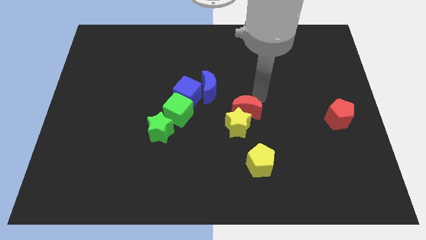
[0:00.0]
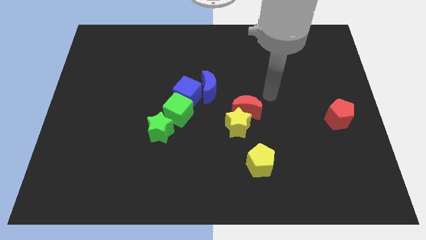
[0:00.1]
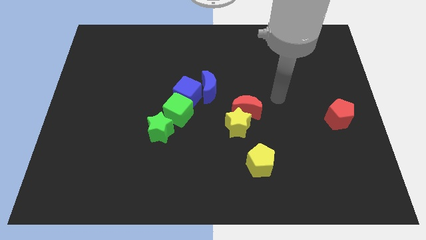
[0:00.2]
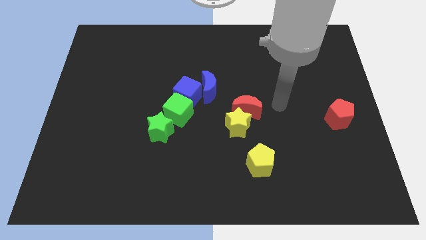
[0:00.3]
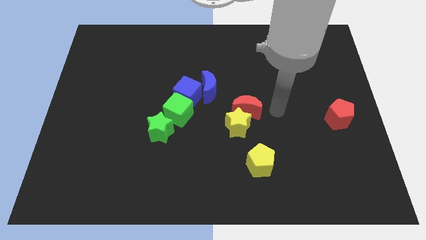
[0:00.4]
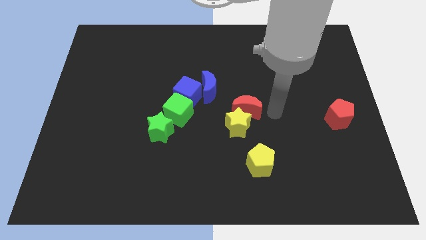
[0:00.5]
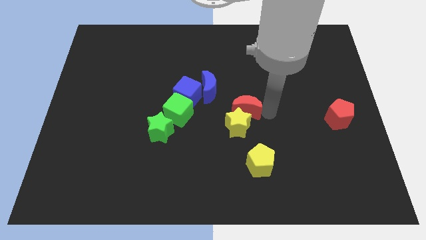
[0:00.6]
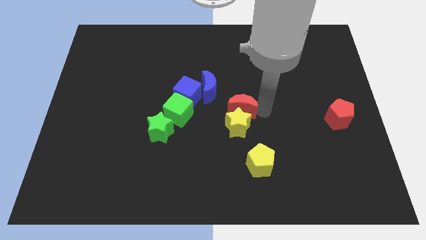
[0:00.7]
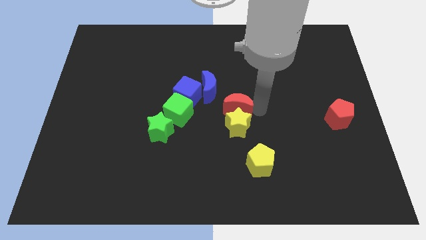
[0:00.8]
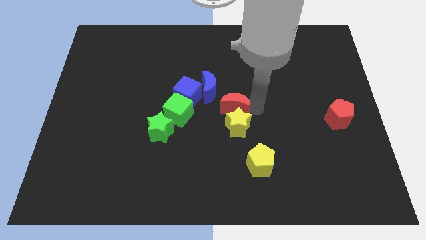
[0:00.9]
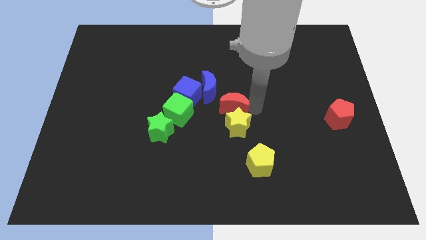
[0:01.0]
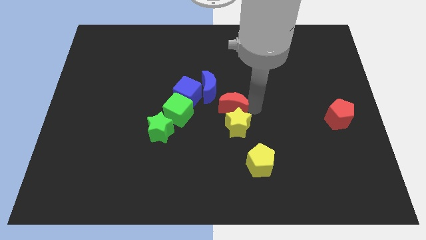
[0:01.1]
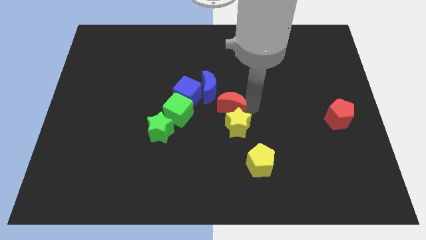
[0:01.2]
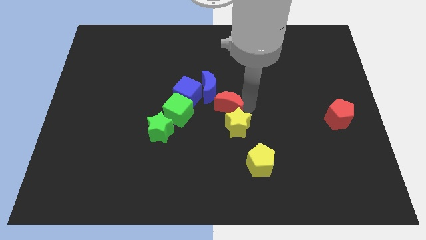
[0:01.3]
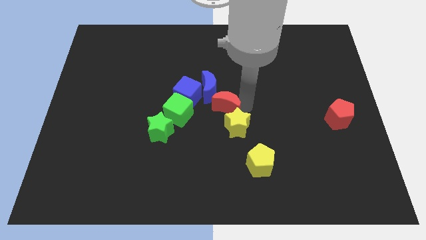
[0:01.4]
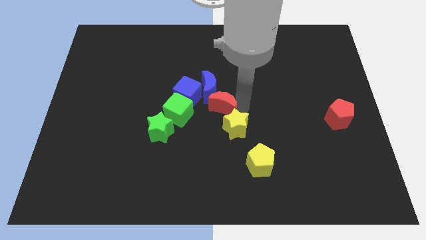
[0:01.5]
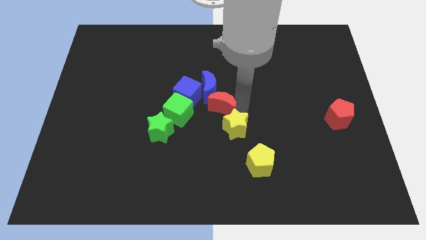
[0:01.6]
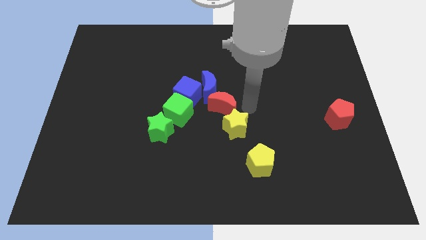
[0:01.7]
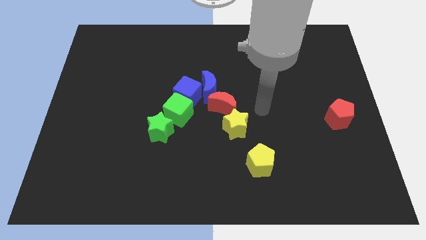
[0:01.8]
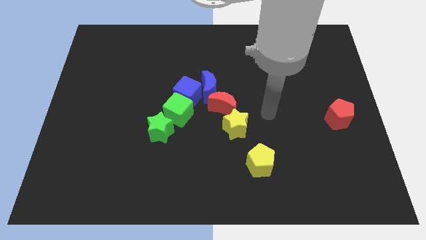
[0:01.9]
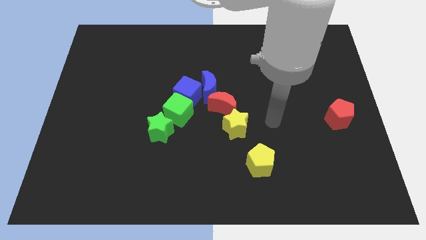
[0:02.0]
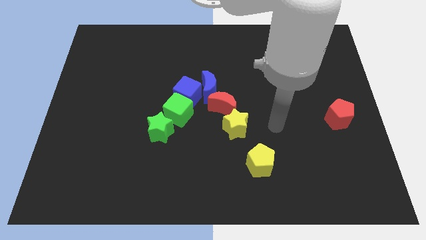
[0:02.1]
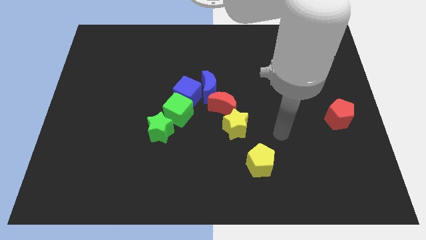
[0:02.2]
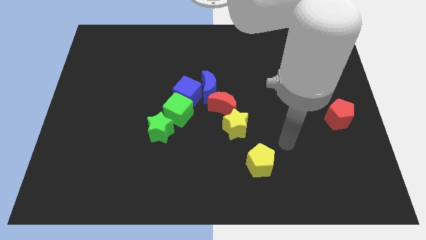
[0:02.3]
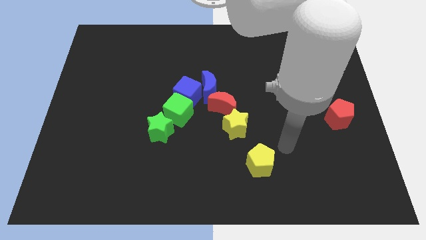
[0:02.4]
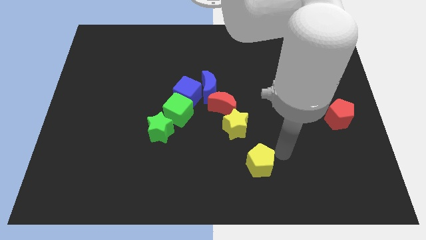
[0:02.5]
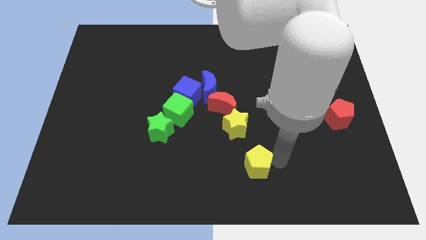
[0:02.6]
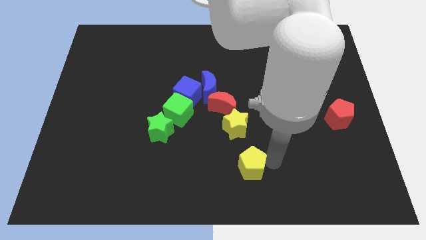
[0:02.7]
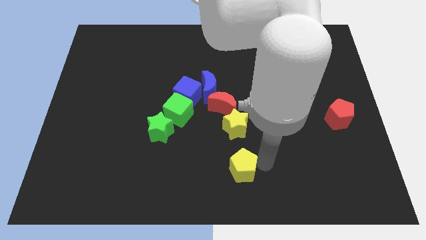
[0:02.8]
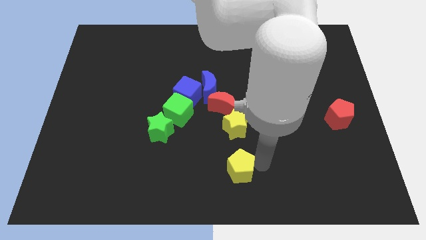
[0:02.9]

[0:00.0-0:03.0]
push yellow pentagon below yellow star

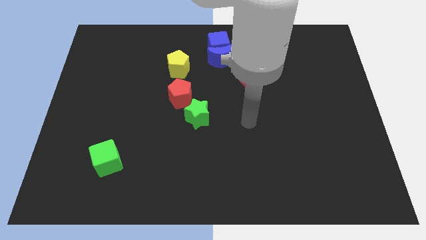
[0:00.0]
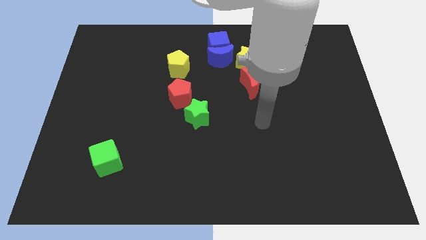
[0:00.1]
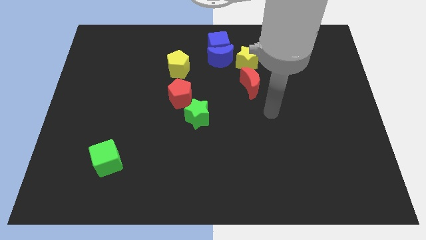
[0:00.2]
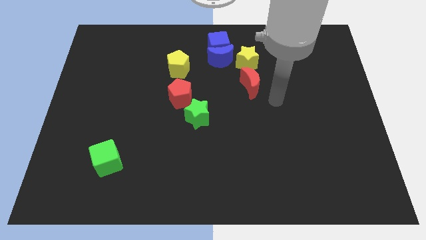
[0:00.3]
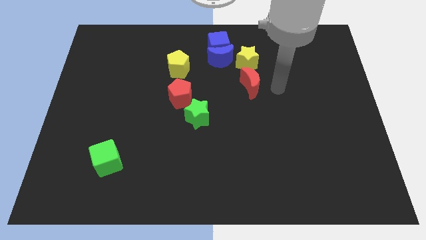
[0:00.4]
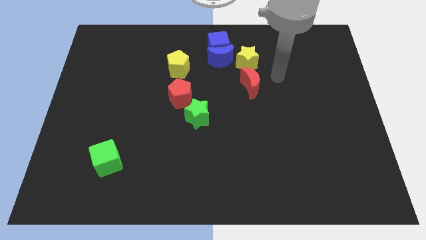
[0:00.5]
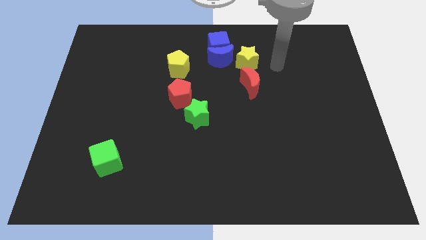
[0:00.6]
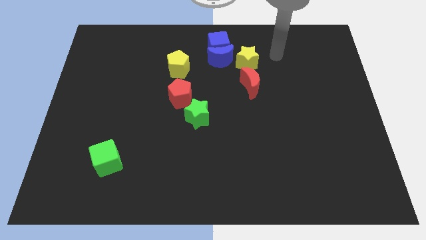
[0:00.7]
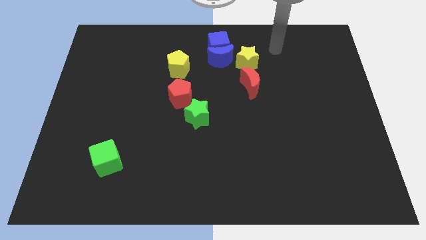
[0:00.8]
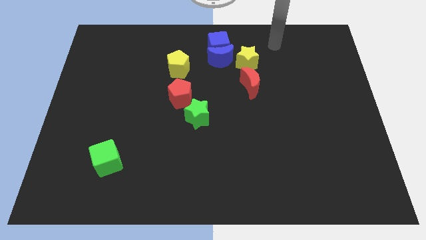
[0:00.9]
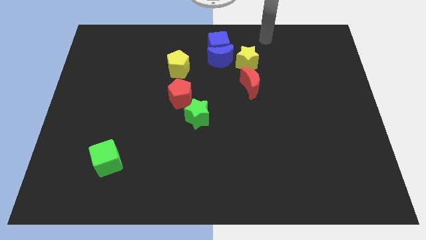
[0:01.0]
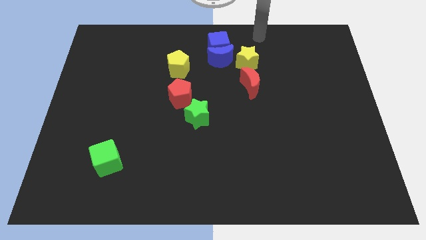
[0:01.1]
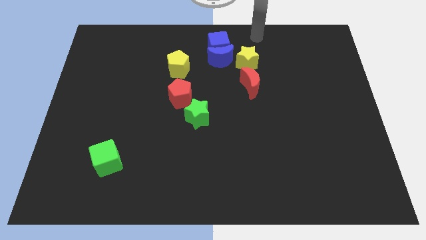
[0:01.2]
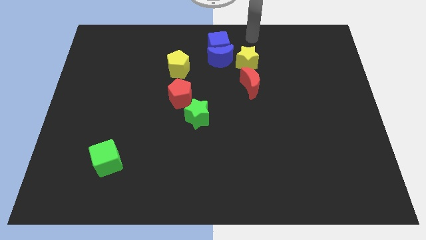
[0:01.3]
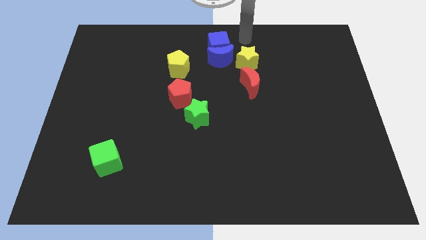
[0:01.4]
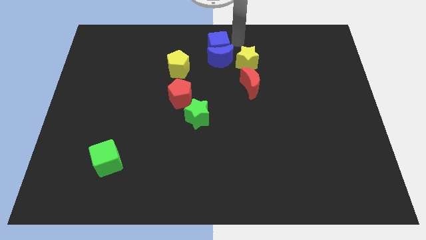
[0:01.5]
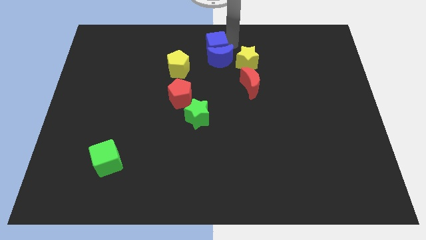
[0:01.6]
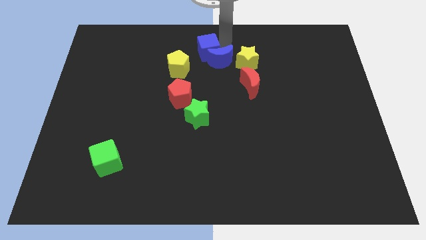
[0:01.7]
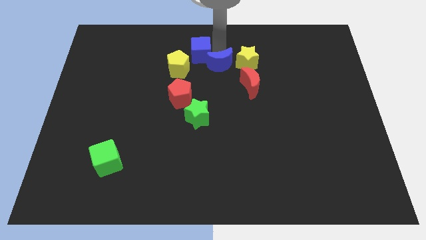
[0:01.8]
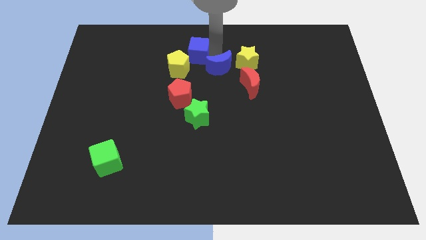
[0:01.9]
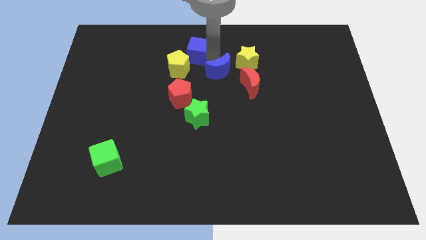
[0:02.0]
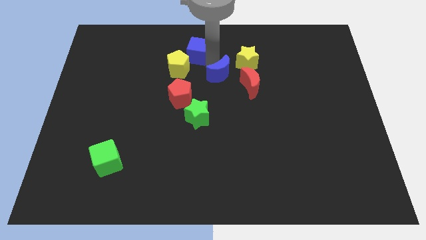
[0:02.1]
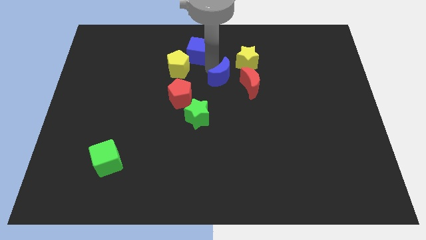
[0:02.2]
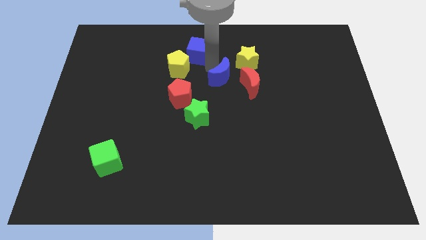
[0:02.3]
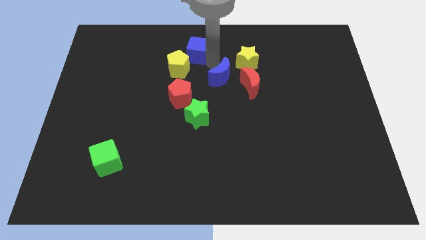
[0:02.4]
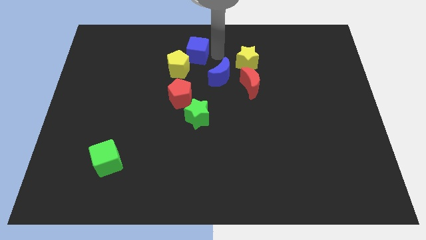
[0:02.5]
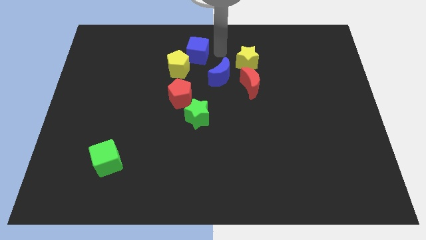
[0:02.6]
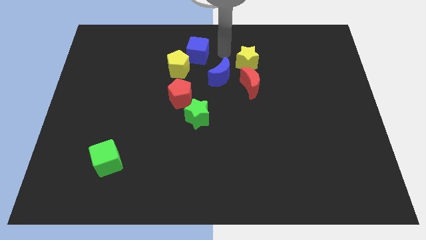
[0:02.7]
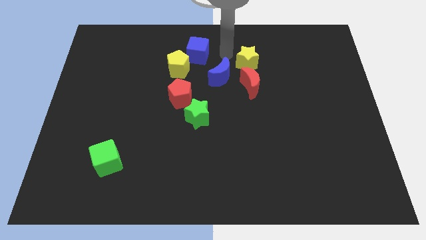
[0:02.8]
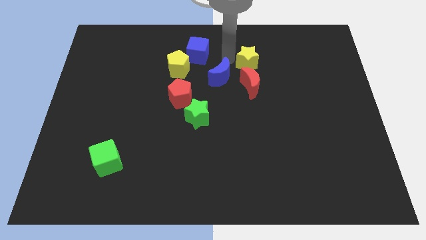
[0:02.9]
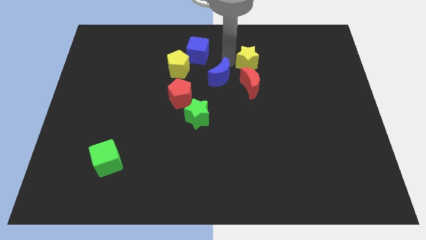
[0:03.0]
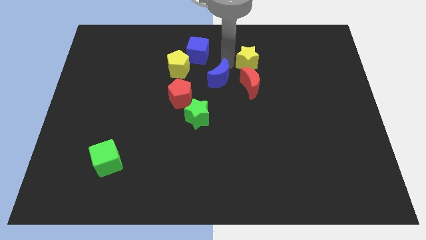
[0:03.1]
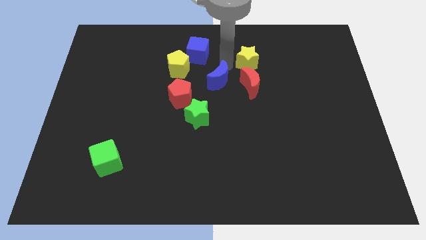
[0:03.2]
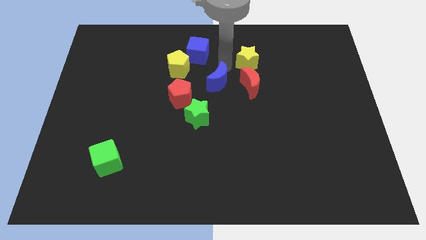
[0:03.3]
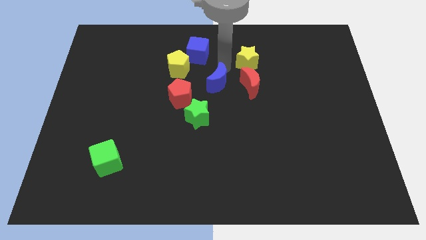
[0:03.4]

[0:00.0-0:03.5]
separate blue moon and blue cube

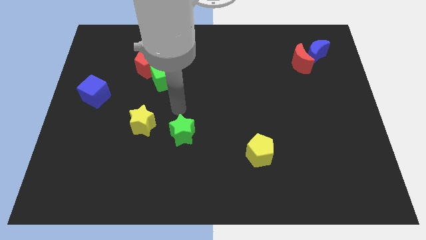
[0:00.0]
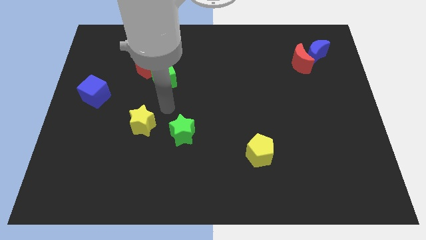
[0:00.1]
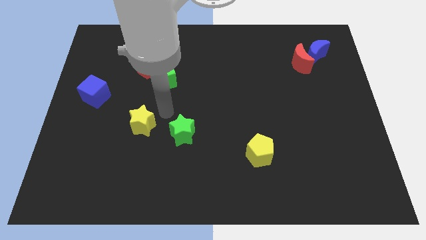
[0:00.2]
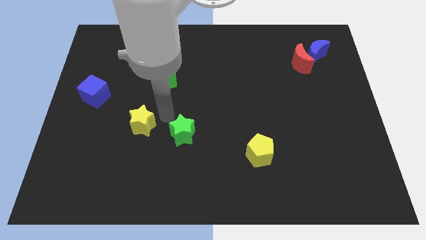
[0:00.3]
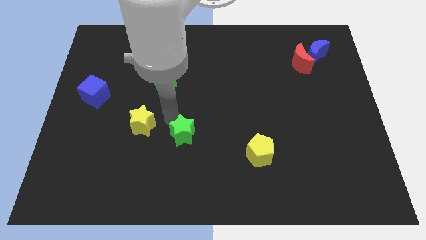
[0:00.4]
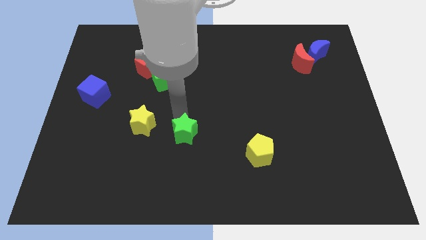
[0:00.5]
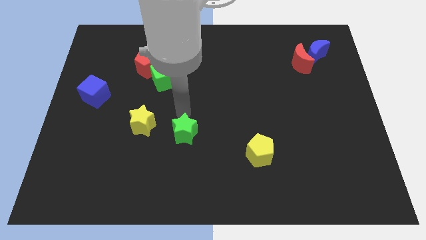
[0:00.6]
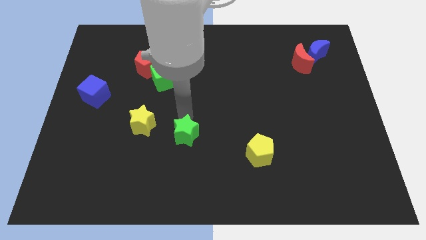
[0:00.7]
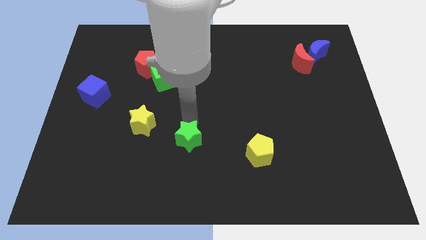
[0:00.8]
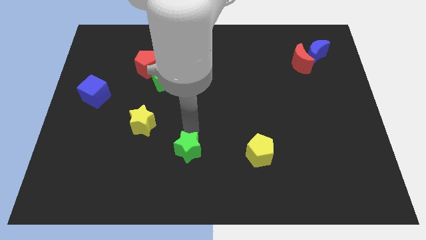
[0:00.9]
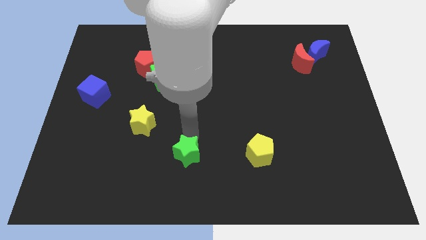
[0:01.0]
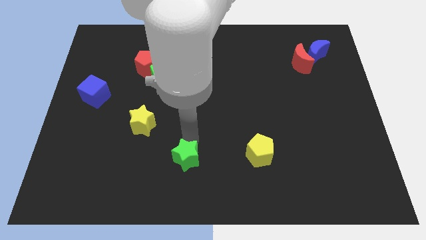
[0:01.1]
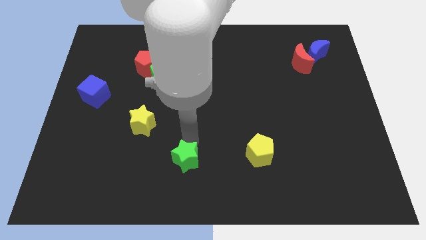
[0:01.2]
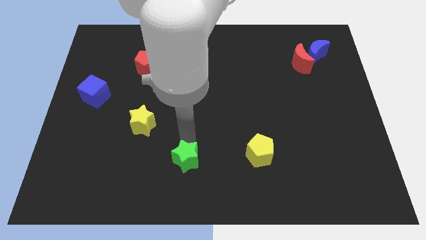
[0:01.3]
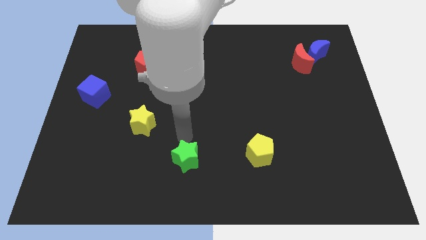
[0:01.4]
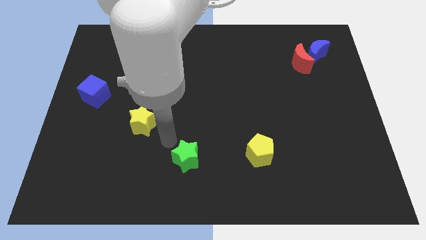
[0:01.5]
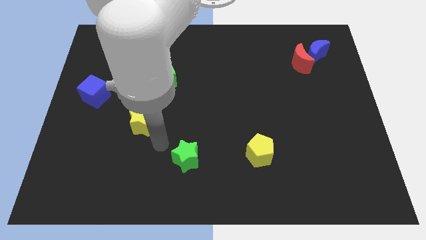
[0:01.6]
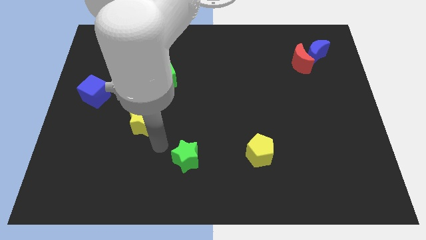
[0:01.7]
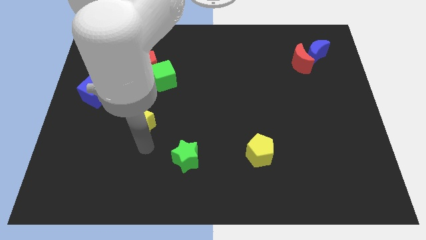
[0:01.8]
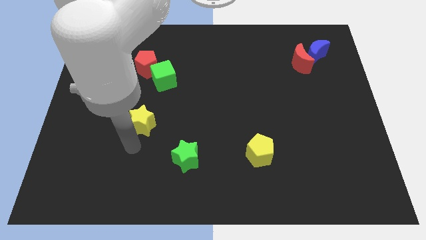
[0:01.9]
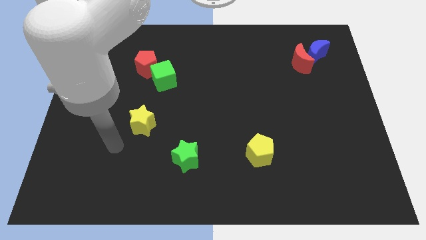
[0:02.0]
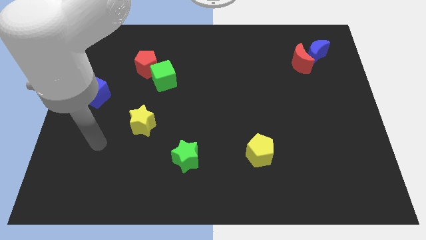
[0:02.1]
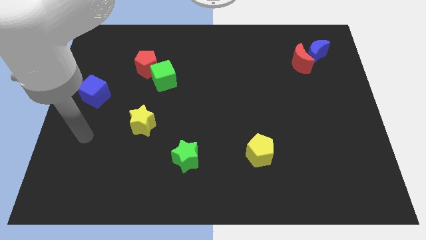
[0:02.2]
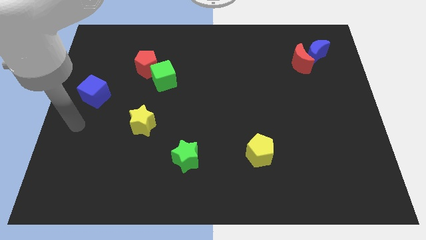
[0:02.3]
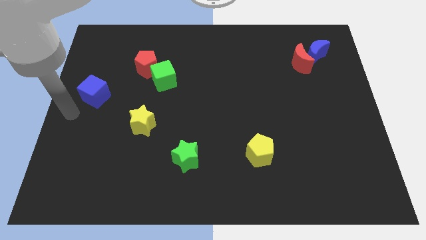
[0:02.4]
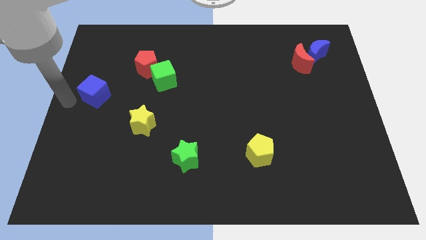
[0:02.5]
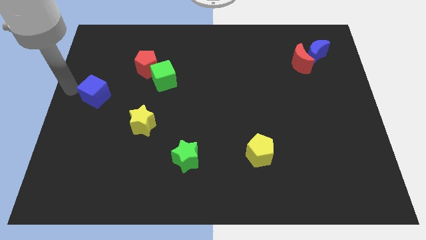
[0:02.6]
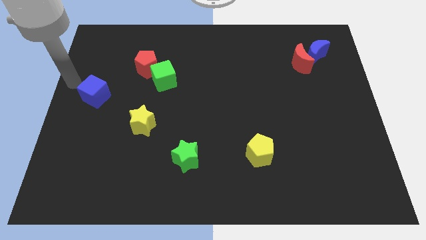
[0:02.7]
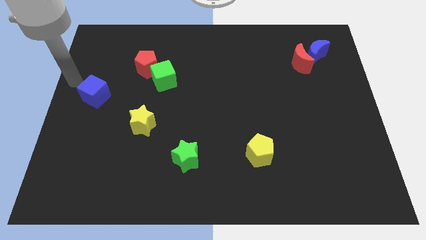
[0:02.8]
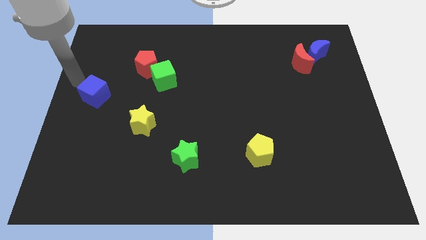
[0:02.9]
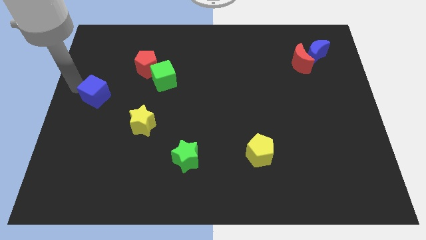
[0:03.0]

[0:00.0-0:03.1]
place your arm left to blue cube
